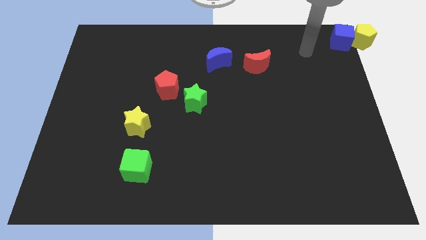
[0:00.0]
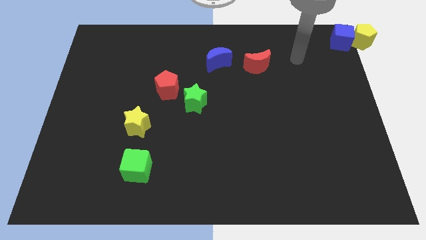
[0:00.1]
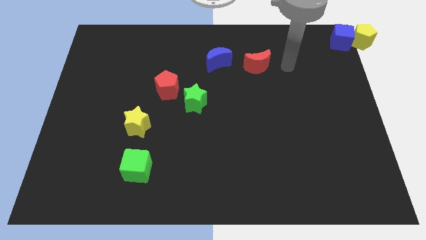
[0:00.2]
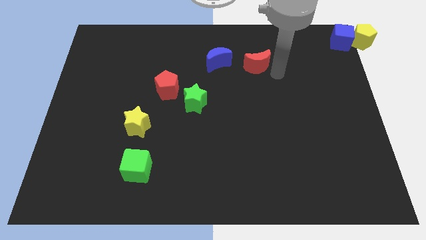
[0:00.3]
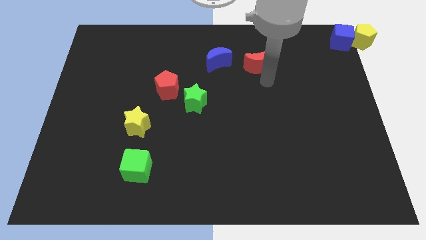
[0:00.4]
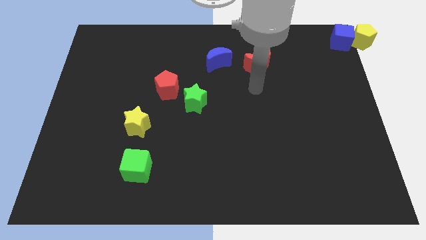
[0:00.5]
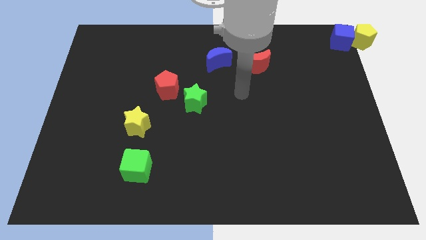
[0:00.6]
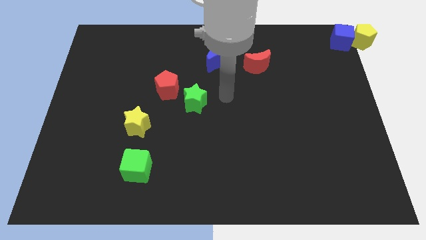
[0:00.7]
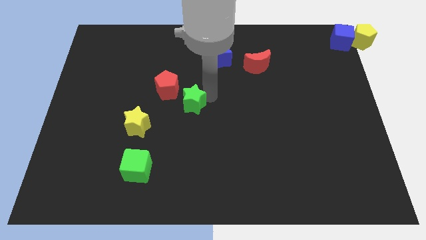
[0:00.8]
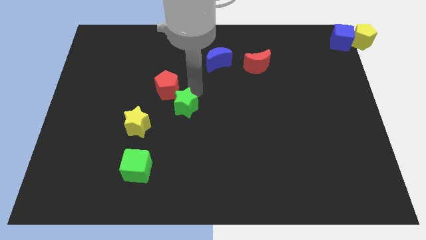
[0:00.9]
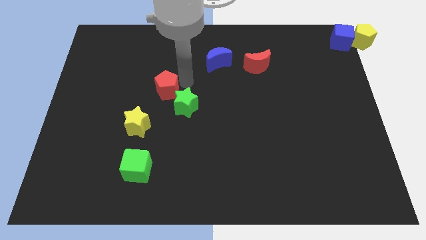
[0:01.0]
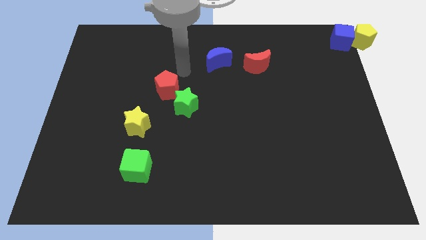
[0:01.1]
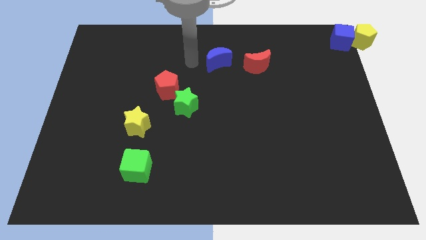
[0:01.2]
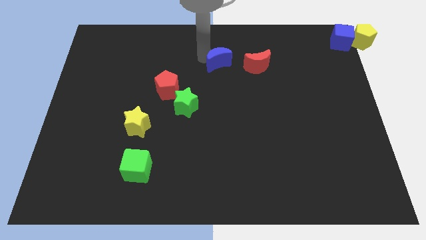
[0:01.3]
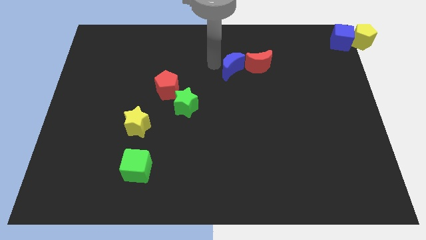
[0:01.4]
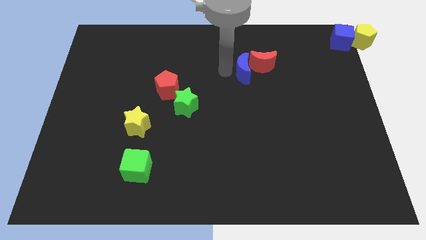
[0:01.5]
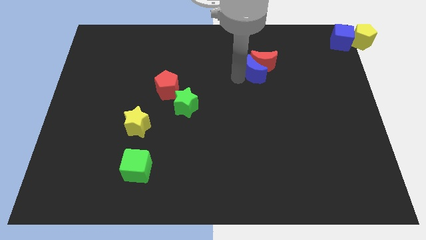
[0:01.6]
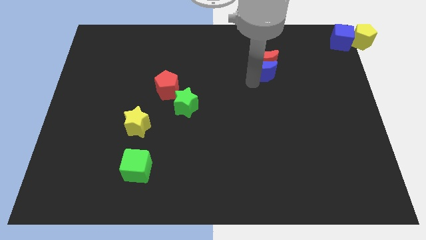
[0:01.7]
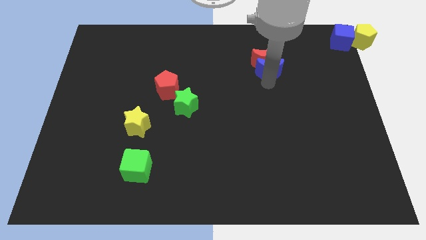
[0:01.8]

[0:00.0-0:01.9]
move the blue crescent into the bottom of the red crescent

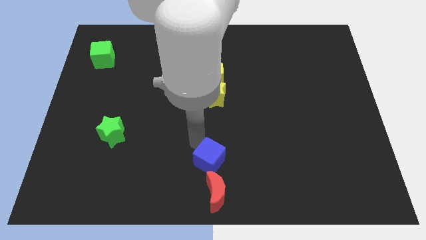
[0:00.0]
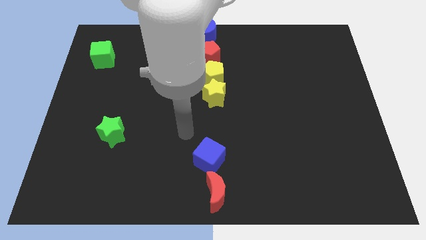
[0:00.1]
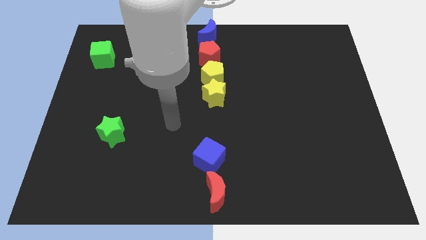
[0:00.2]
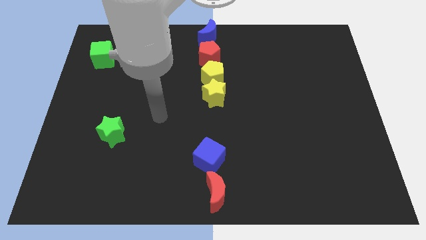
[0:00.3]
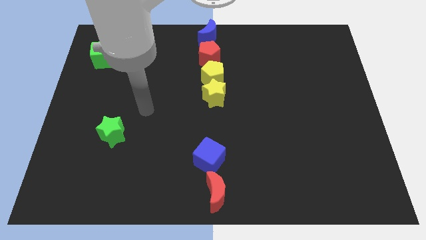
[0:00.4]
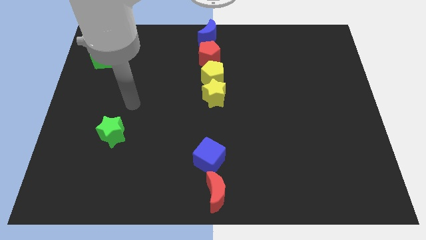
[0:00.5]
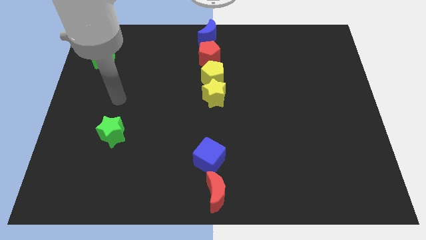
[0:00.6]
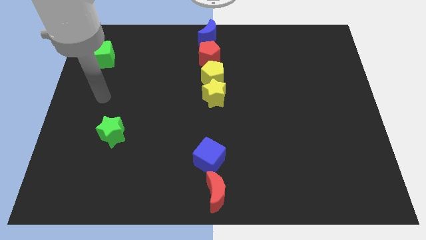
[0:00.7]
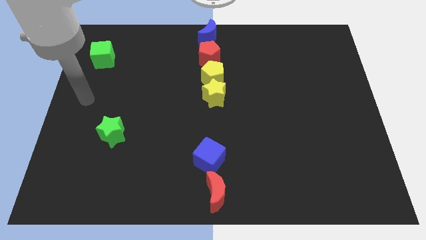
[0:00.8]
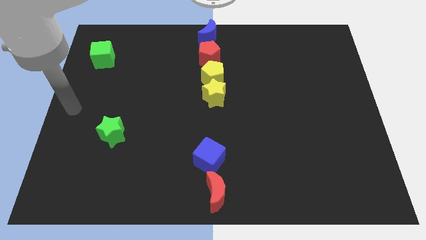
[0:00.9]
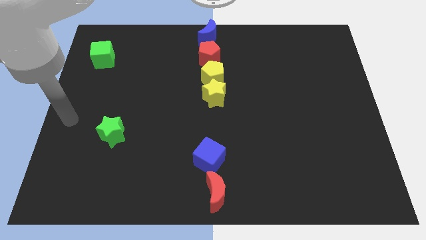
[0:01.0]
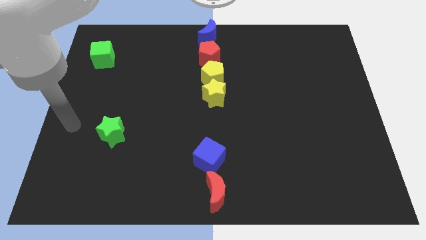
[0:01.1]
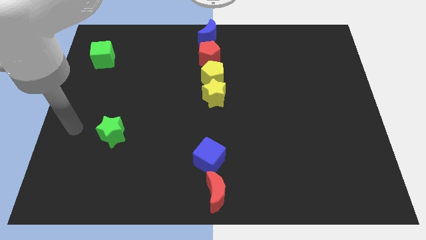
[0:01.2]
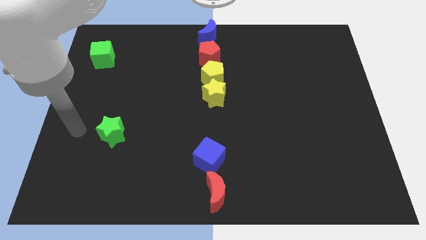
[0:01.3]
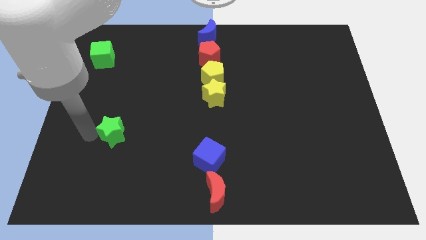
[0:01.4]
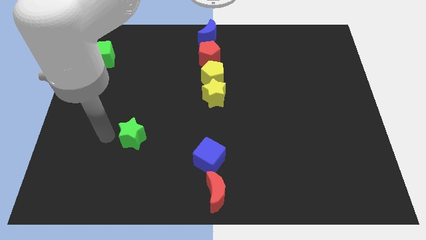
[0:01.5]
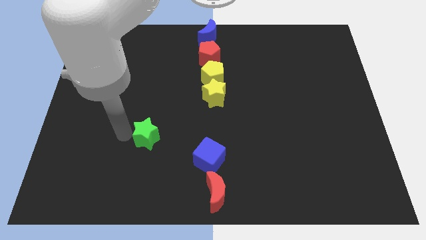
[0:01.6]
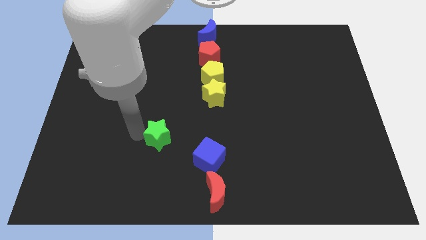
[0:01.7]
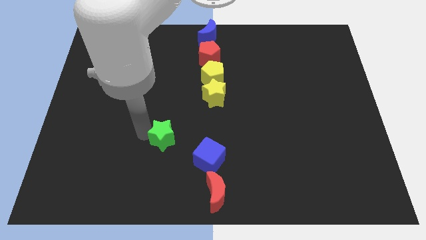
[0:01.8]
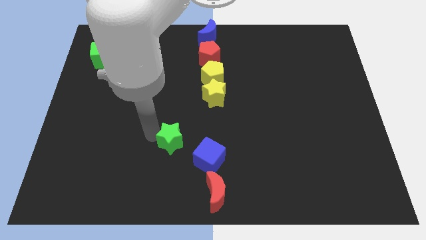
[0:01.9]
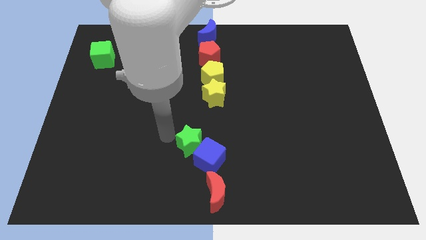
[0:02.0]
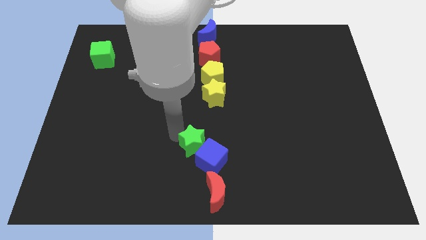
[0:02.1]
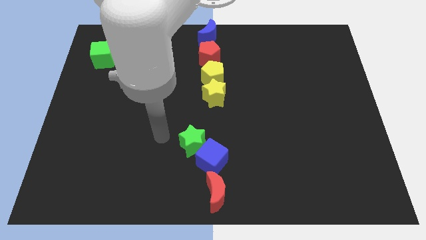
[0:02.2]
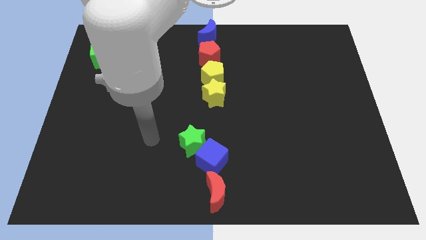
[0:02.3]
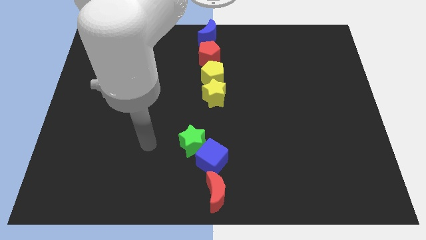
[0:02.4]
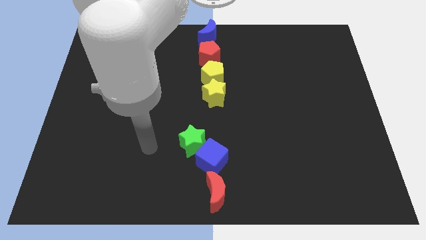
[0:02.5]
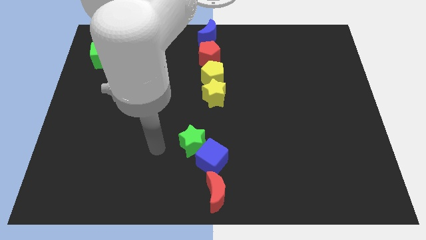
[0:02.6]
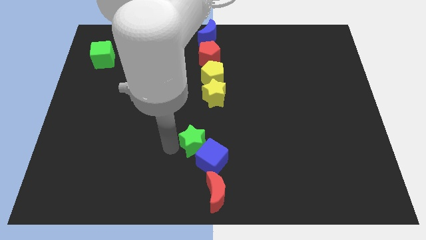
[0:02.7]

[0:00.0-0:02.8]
move the green star into the blue cube

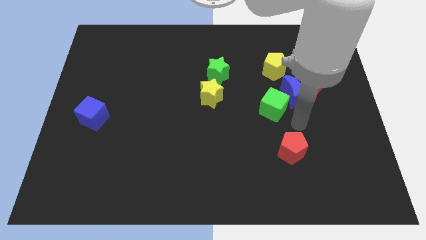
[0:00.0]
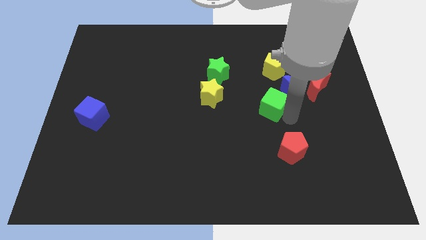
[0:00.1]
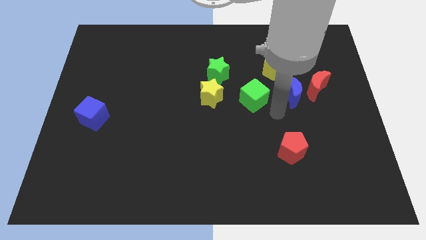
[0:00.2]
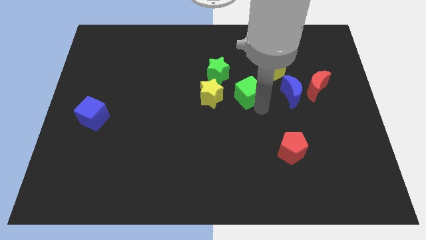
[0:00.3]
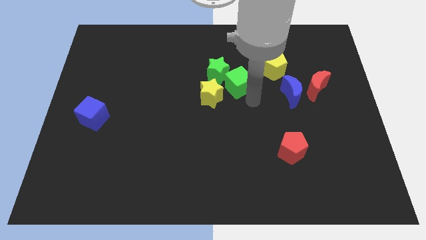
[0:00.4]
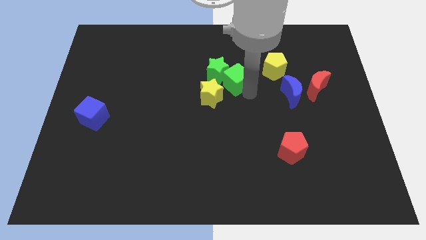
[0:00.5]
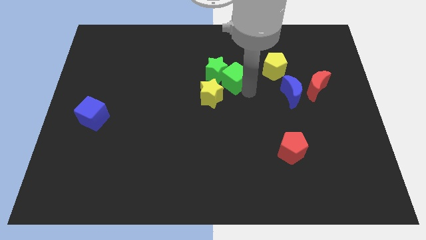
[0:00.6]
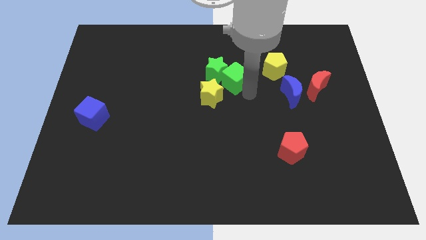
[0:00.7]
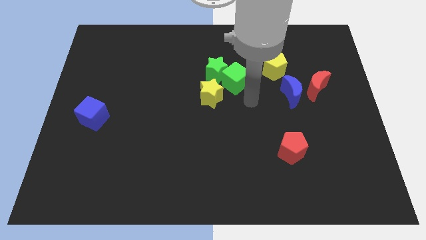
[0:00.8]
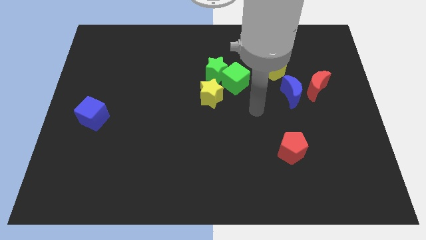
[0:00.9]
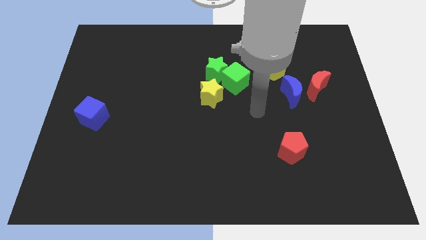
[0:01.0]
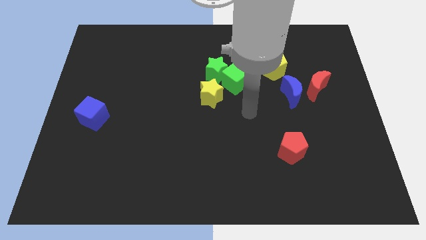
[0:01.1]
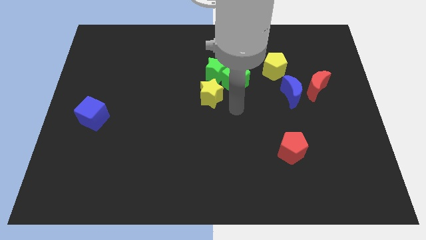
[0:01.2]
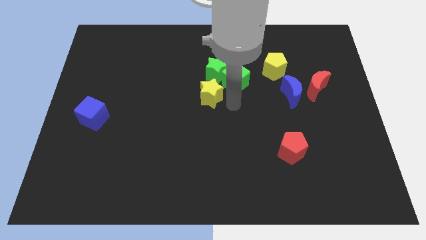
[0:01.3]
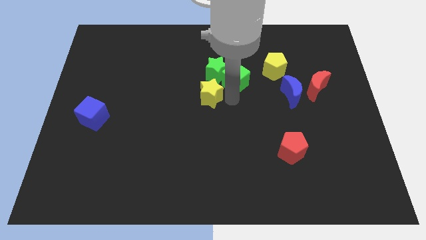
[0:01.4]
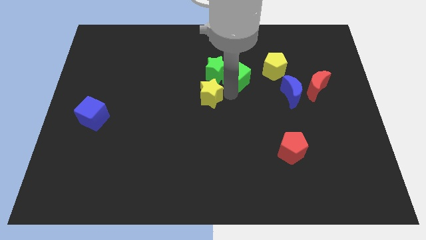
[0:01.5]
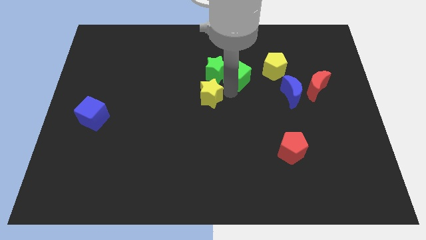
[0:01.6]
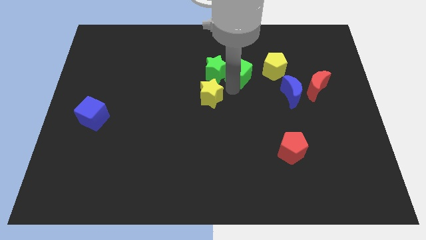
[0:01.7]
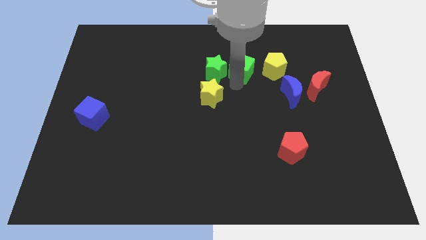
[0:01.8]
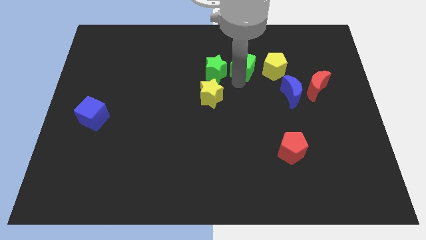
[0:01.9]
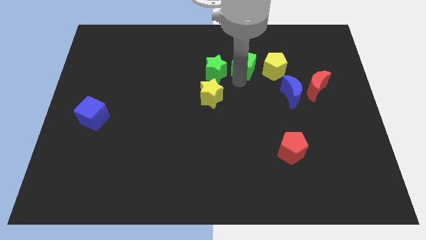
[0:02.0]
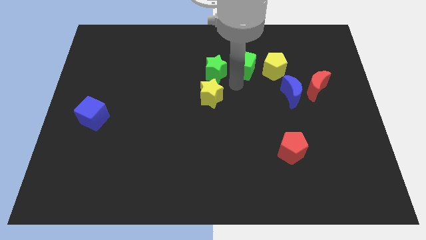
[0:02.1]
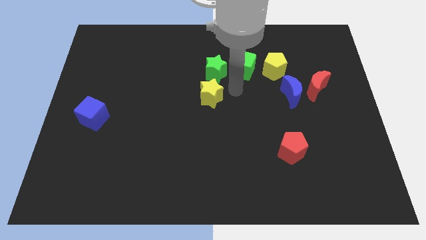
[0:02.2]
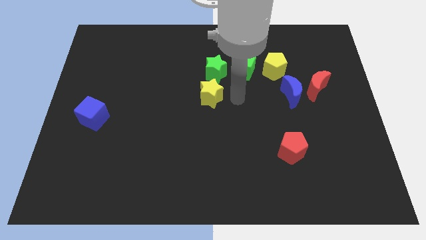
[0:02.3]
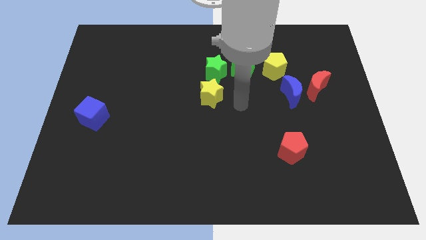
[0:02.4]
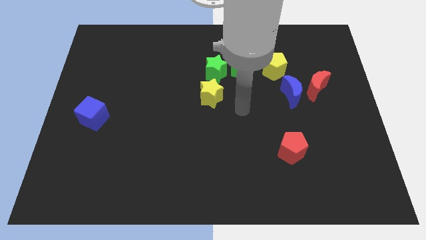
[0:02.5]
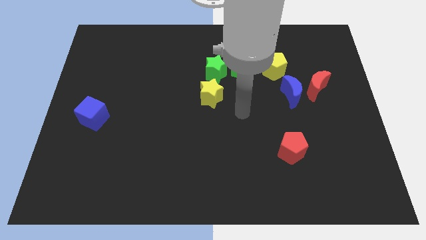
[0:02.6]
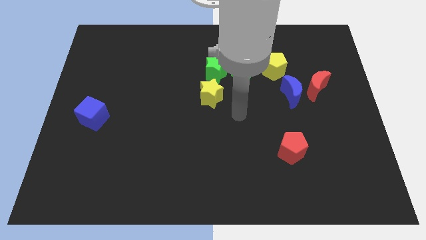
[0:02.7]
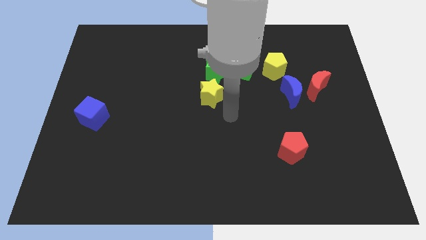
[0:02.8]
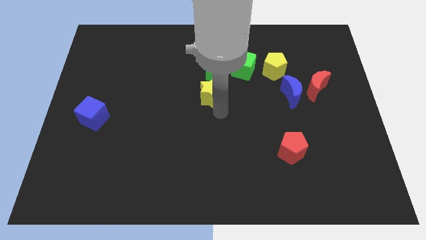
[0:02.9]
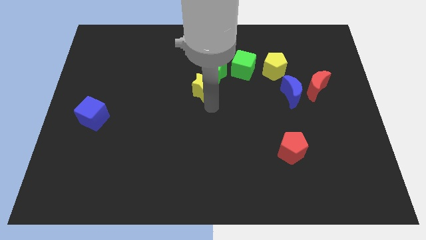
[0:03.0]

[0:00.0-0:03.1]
put the green cube in between the green star and the yellow pentagon

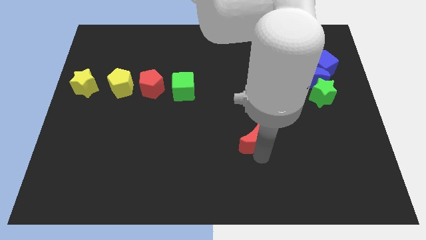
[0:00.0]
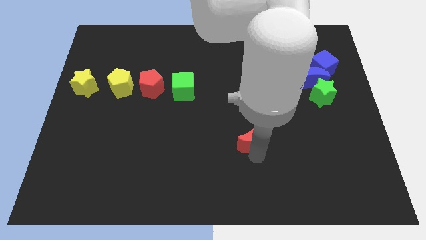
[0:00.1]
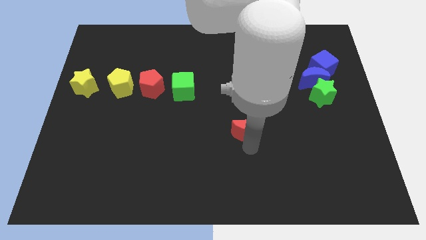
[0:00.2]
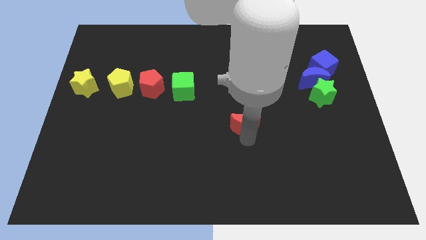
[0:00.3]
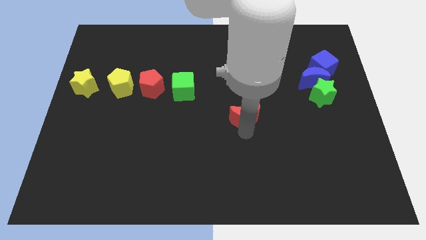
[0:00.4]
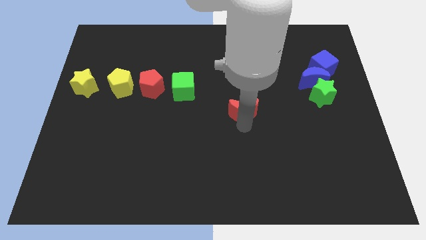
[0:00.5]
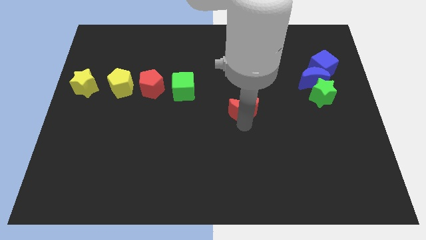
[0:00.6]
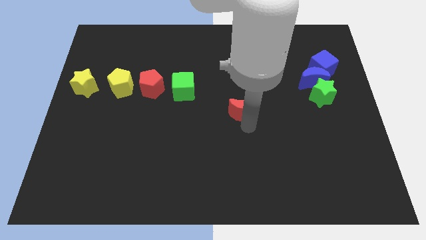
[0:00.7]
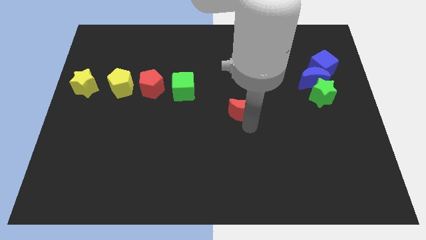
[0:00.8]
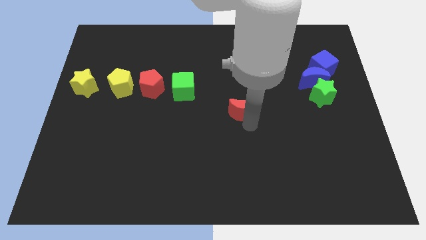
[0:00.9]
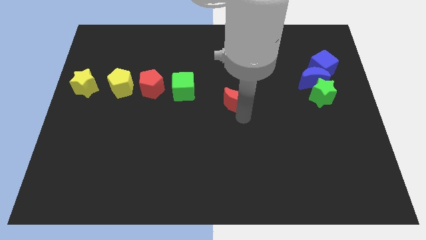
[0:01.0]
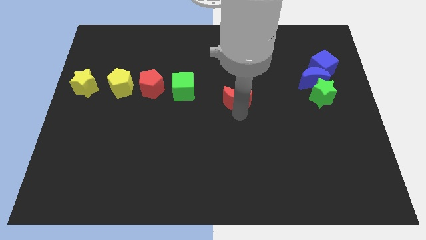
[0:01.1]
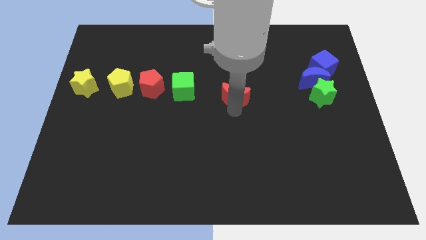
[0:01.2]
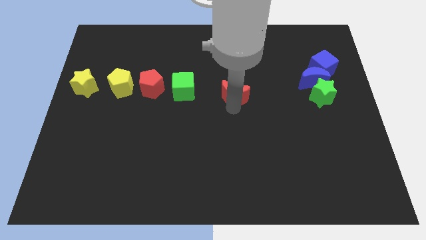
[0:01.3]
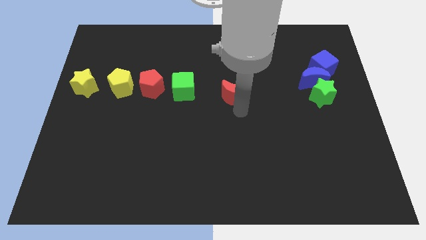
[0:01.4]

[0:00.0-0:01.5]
push the red crescent to the right of the green cube
